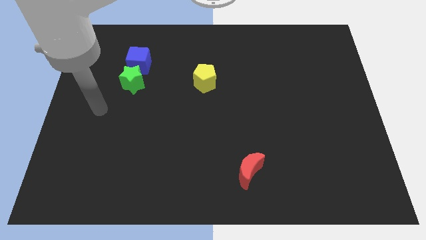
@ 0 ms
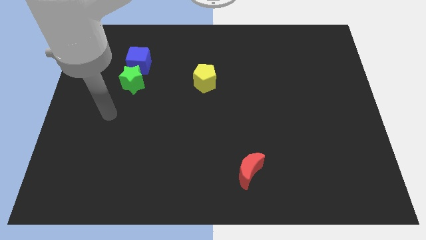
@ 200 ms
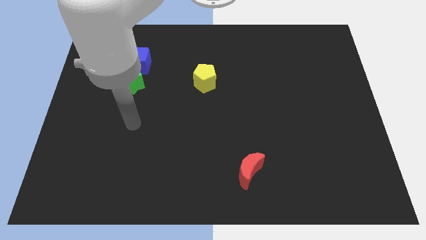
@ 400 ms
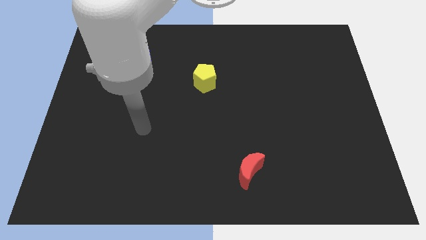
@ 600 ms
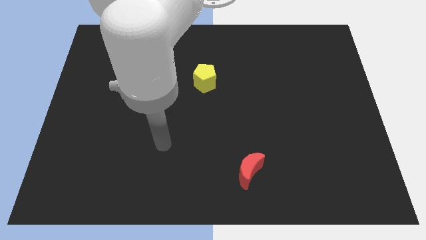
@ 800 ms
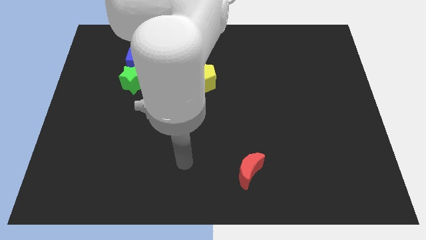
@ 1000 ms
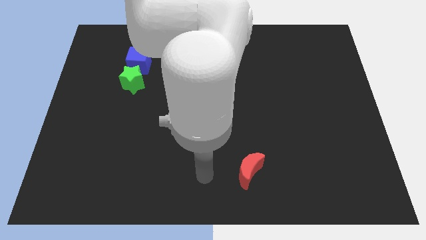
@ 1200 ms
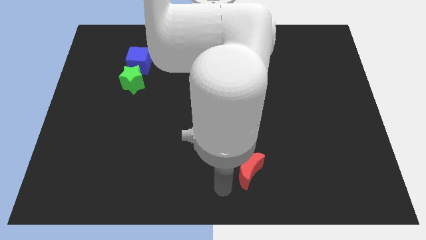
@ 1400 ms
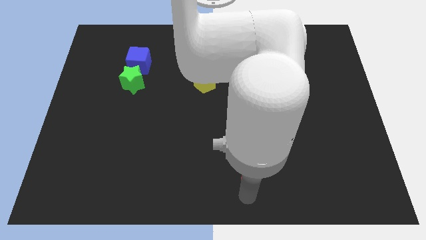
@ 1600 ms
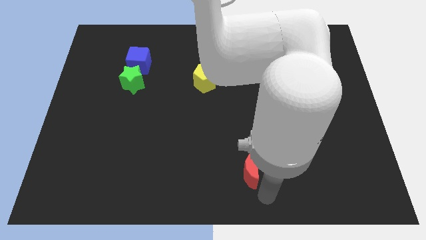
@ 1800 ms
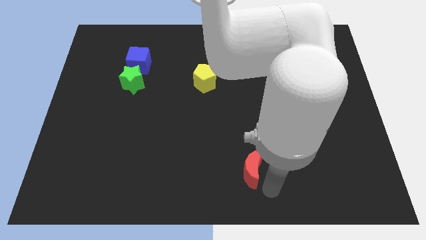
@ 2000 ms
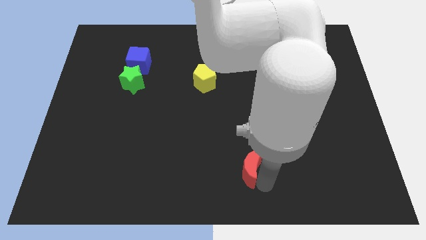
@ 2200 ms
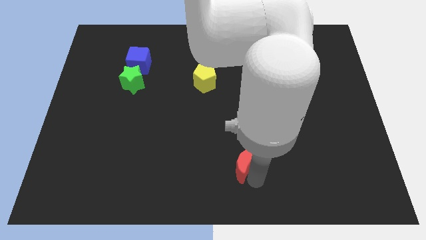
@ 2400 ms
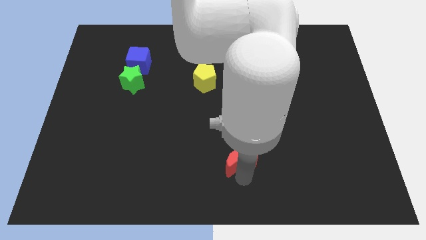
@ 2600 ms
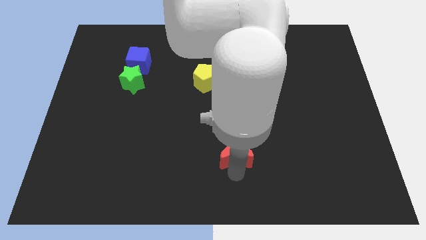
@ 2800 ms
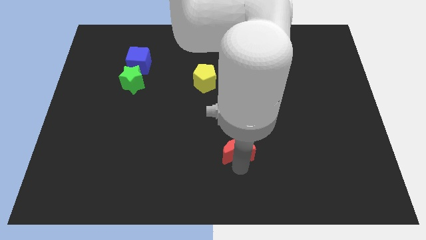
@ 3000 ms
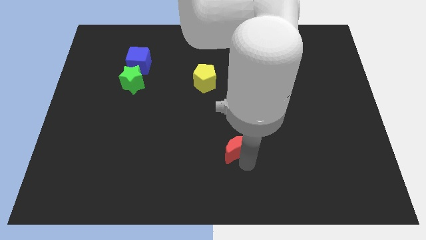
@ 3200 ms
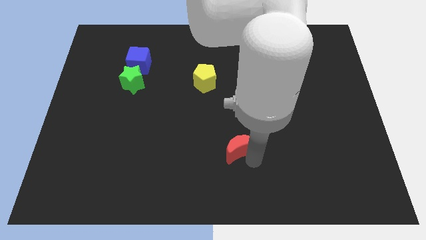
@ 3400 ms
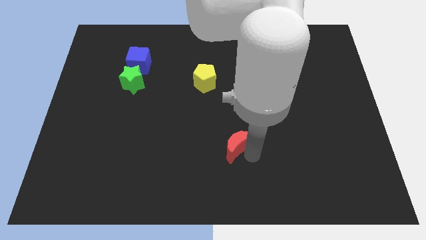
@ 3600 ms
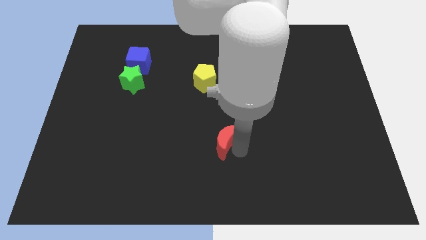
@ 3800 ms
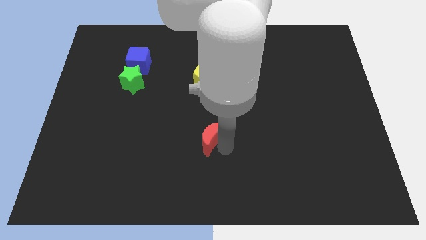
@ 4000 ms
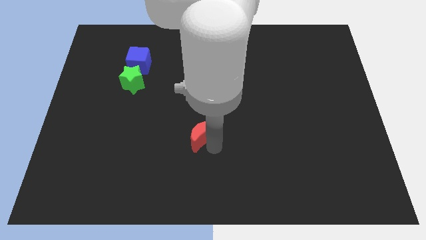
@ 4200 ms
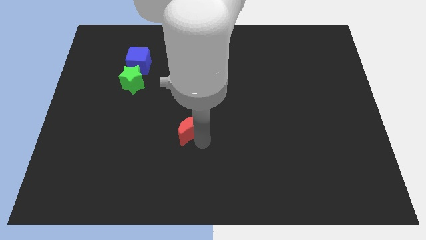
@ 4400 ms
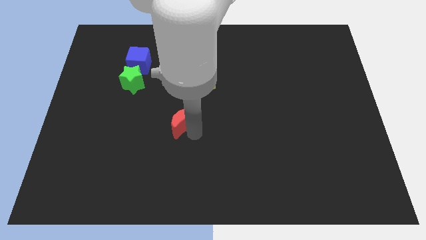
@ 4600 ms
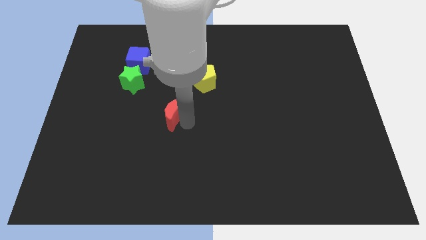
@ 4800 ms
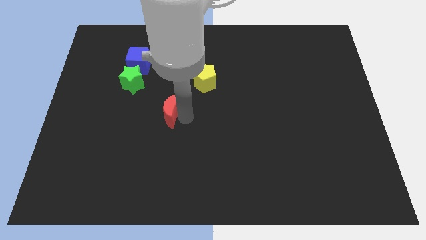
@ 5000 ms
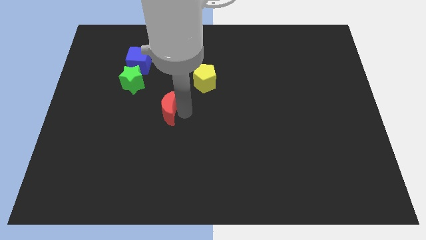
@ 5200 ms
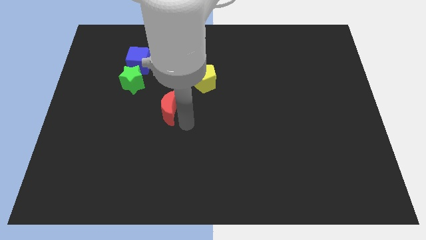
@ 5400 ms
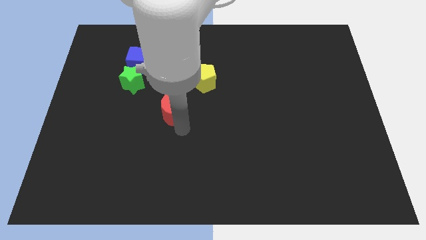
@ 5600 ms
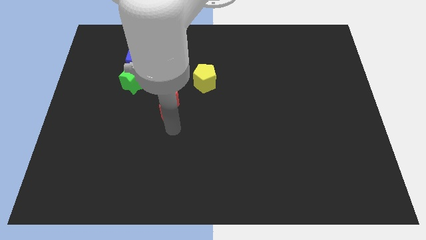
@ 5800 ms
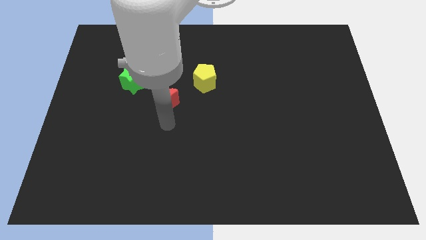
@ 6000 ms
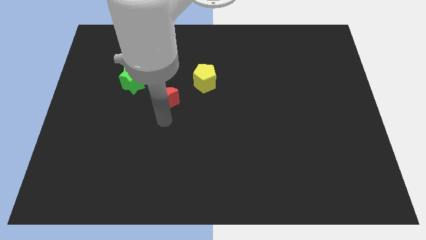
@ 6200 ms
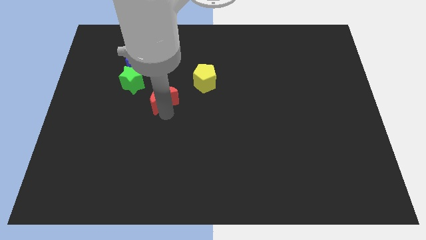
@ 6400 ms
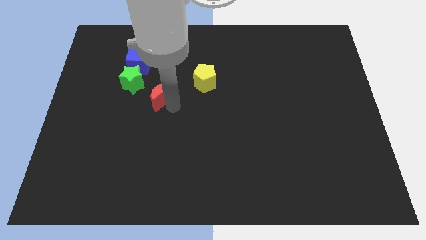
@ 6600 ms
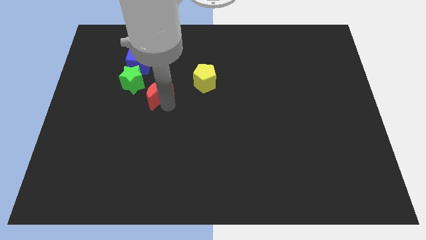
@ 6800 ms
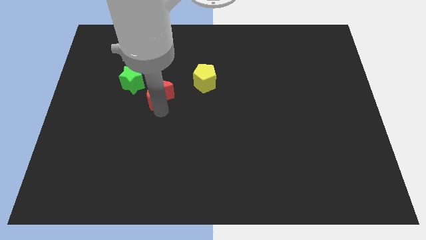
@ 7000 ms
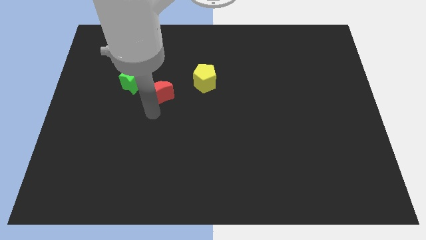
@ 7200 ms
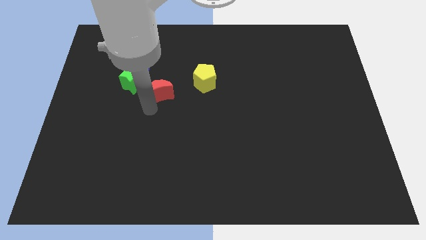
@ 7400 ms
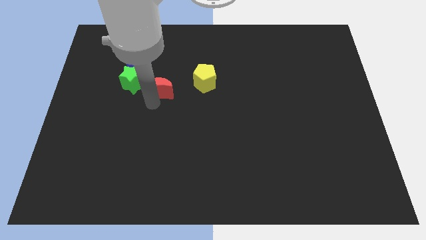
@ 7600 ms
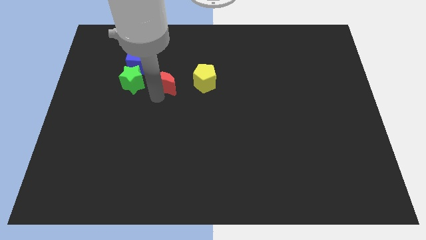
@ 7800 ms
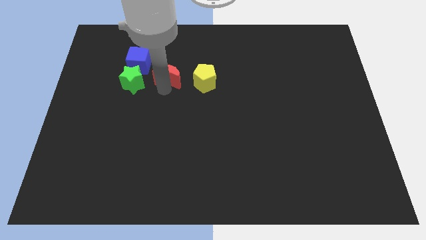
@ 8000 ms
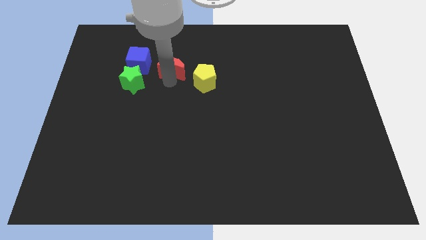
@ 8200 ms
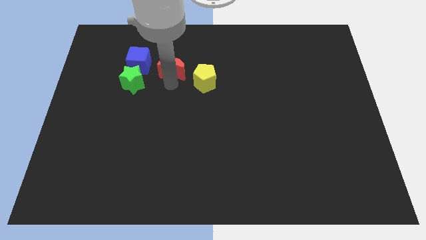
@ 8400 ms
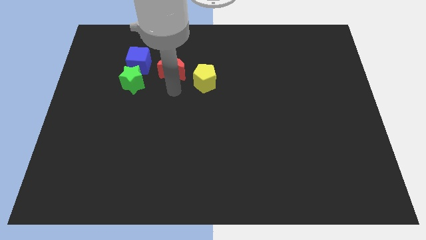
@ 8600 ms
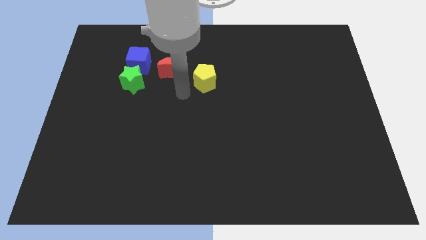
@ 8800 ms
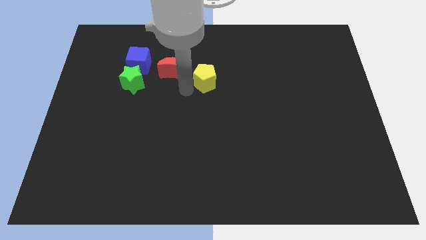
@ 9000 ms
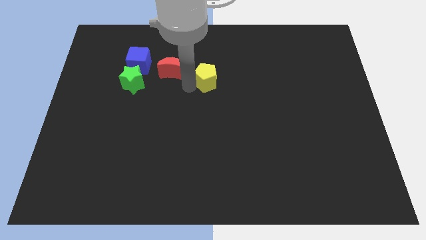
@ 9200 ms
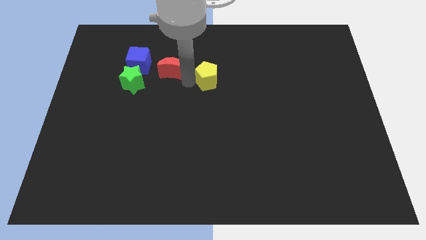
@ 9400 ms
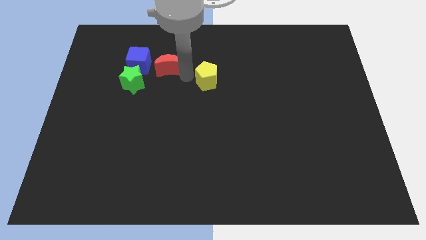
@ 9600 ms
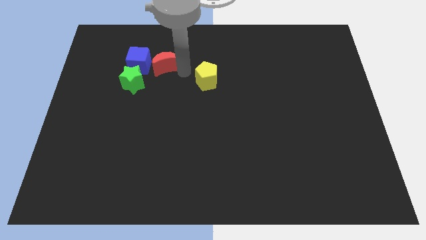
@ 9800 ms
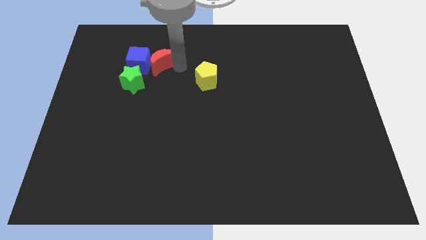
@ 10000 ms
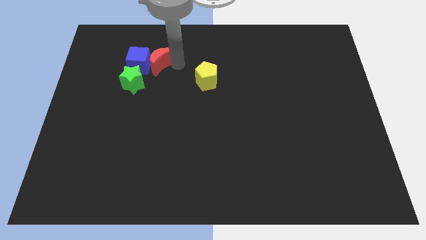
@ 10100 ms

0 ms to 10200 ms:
put the red block towards the blue block

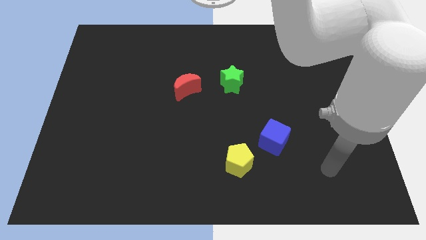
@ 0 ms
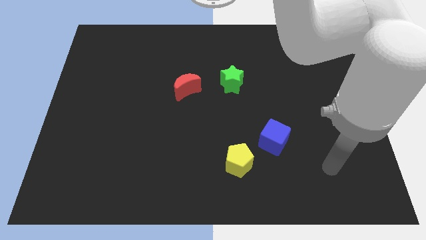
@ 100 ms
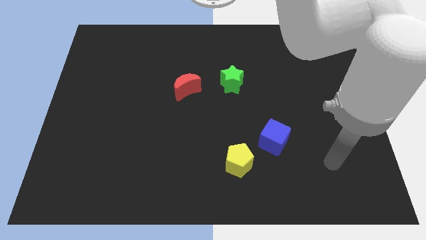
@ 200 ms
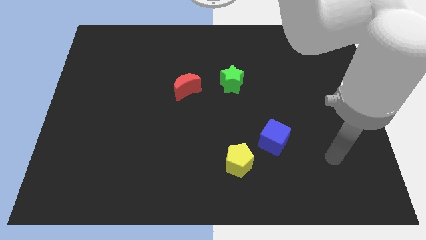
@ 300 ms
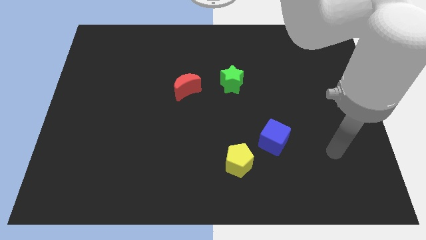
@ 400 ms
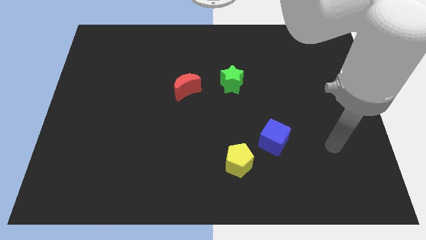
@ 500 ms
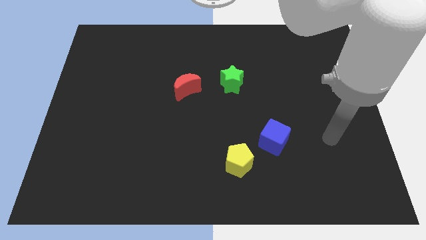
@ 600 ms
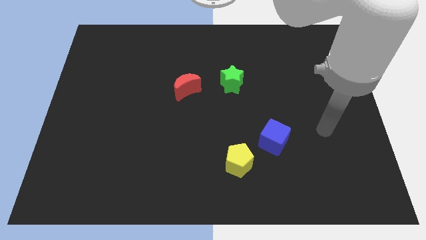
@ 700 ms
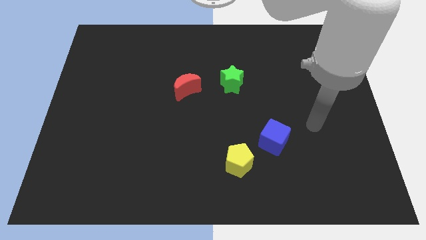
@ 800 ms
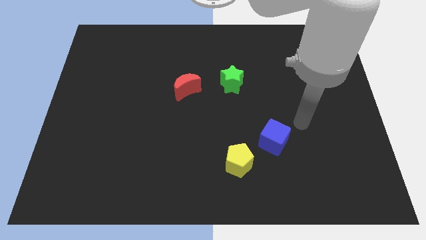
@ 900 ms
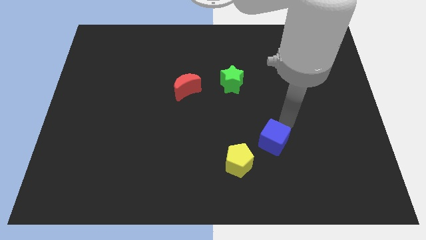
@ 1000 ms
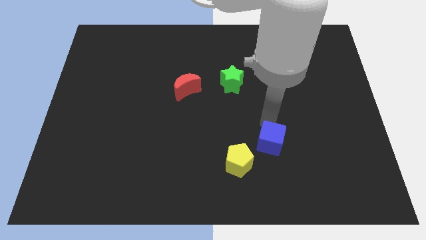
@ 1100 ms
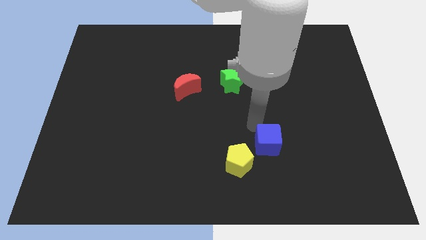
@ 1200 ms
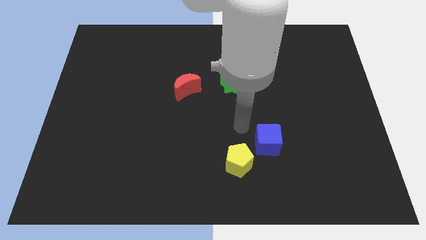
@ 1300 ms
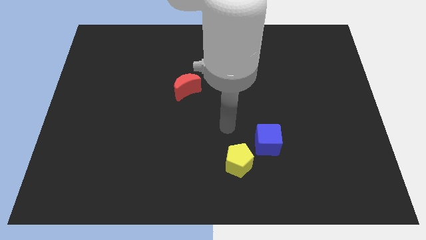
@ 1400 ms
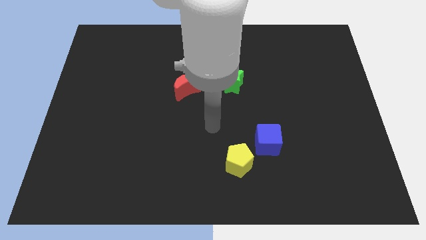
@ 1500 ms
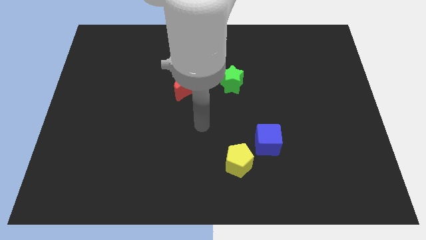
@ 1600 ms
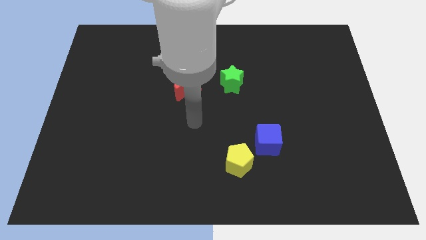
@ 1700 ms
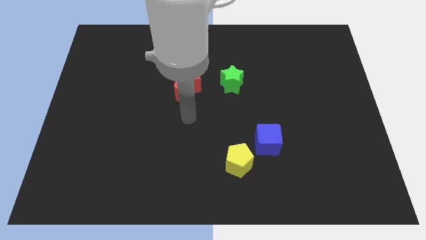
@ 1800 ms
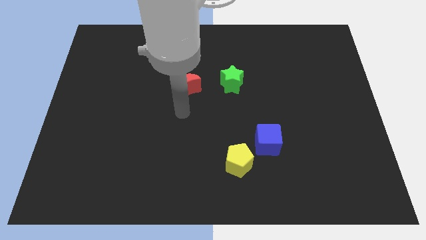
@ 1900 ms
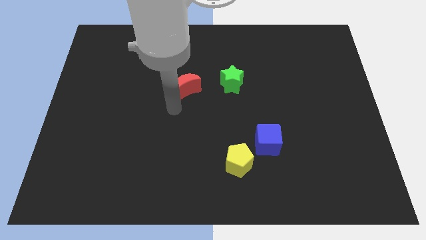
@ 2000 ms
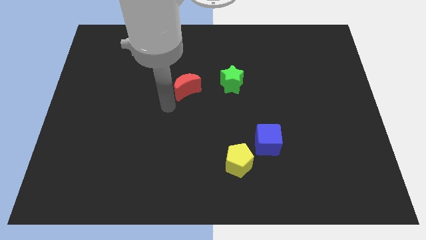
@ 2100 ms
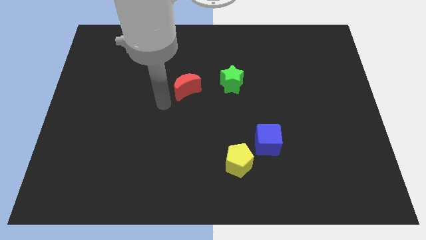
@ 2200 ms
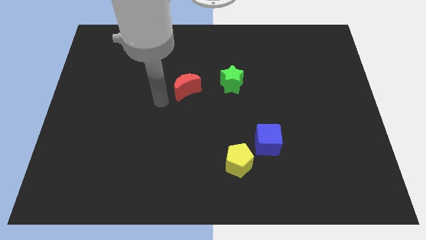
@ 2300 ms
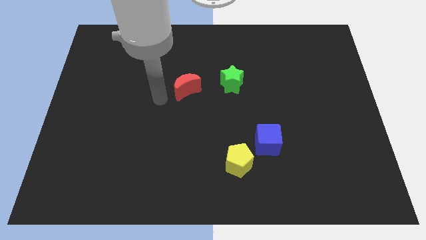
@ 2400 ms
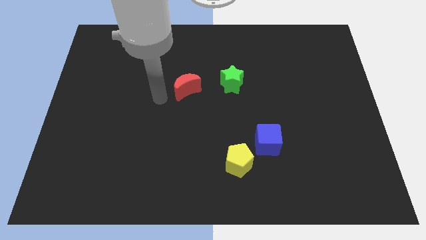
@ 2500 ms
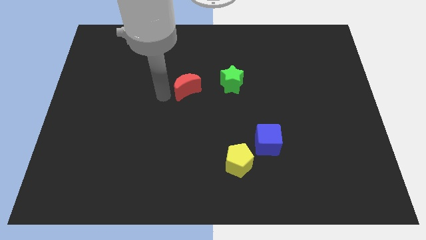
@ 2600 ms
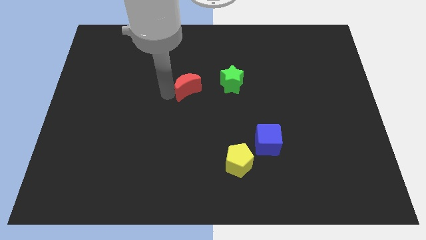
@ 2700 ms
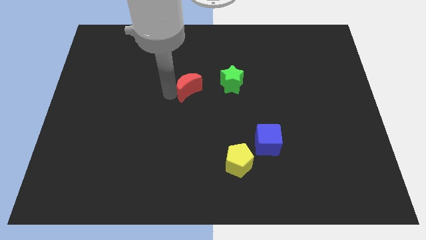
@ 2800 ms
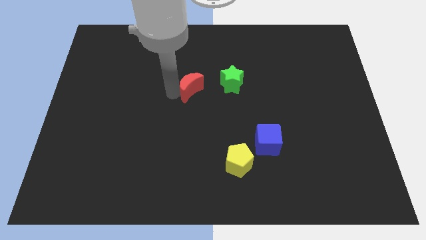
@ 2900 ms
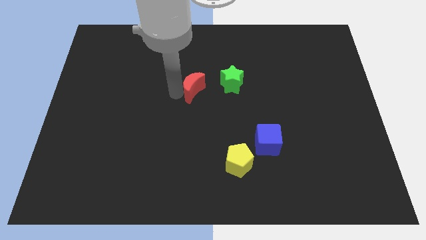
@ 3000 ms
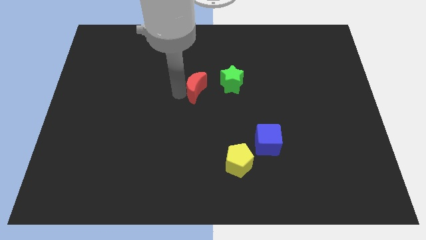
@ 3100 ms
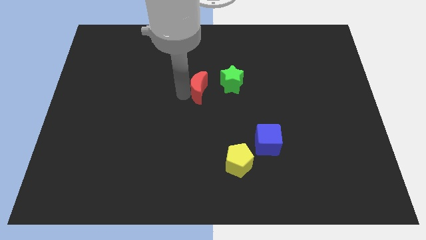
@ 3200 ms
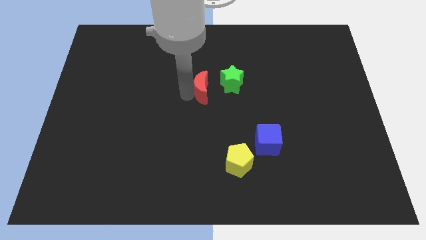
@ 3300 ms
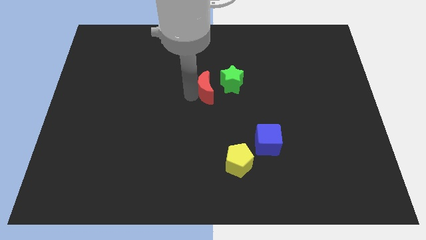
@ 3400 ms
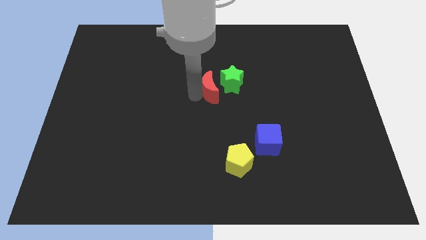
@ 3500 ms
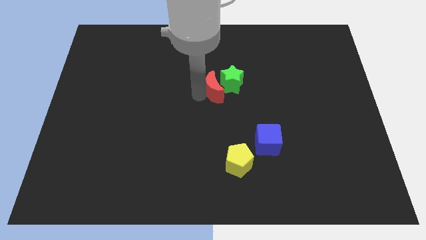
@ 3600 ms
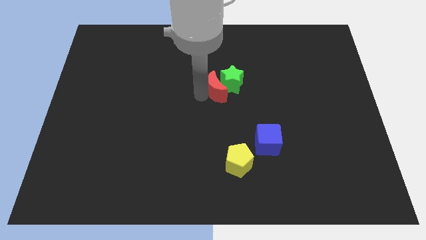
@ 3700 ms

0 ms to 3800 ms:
move the red moon towards the green star
